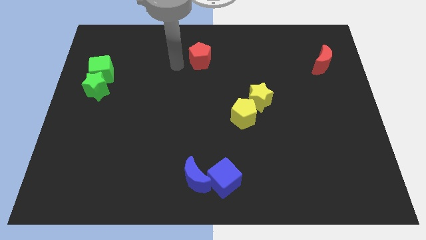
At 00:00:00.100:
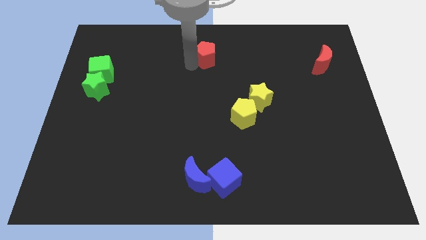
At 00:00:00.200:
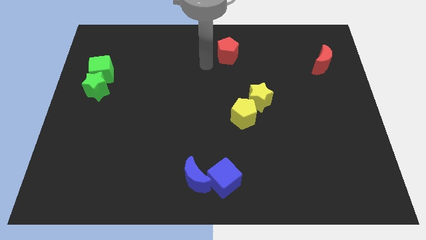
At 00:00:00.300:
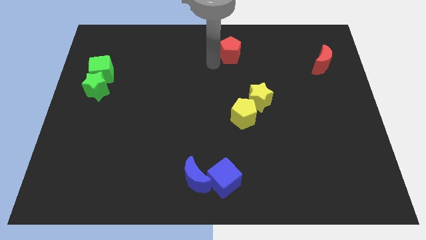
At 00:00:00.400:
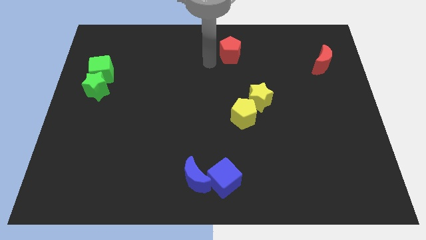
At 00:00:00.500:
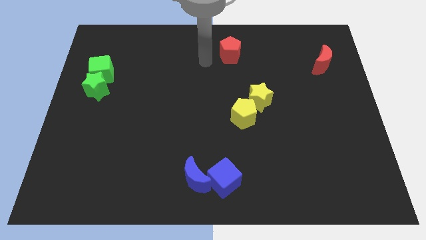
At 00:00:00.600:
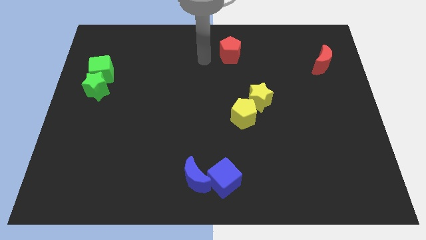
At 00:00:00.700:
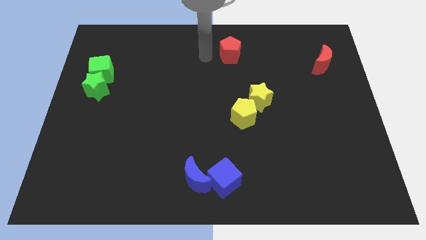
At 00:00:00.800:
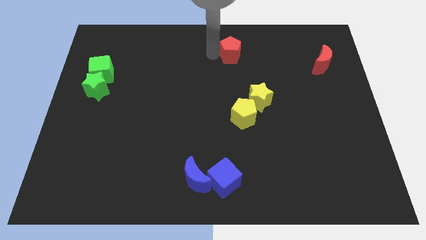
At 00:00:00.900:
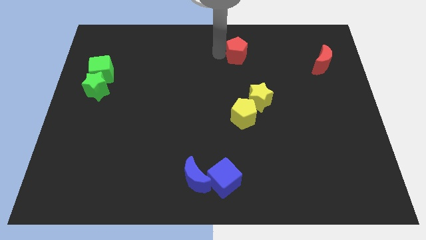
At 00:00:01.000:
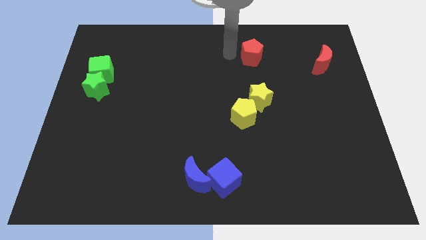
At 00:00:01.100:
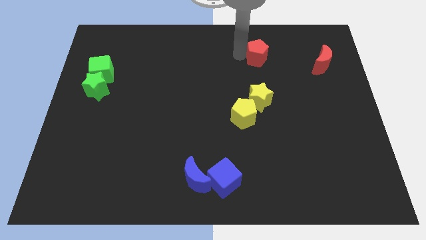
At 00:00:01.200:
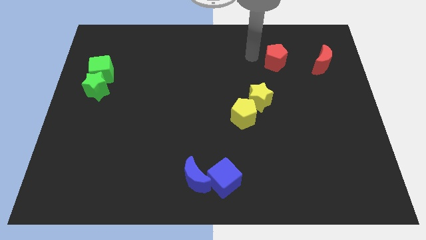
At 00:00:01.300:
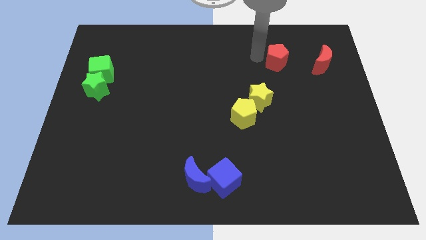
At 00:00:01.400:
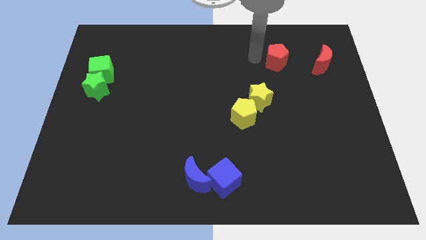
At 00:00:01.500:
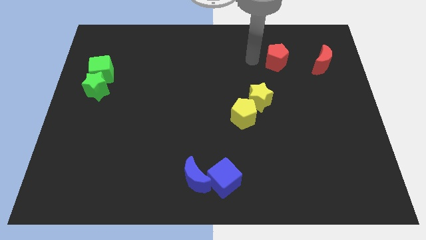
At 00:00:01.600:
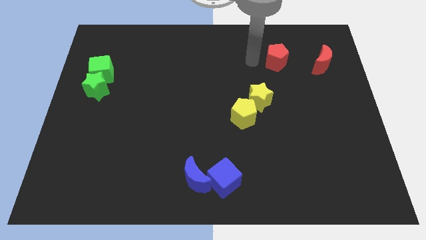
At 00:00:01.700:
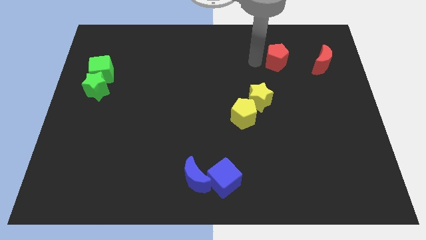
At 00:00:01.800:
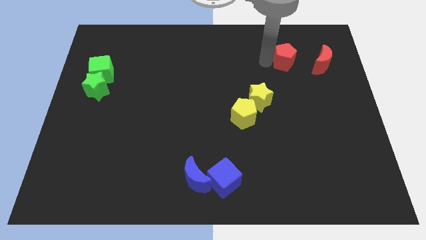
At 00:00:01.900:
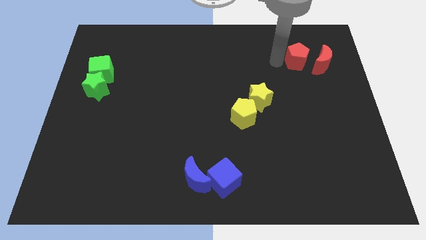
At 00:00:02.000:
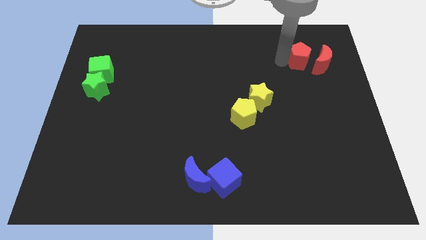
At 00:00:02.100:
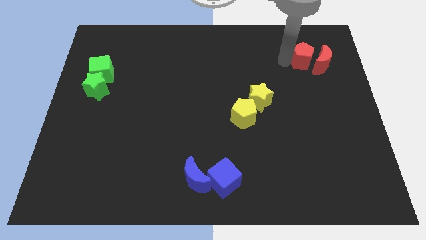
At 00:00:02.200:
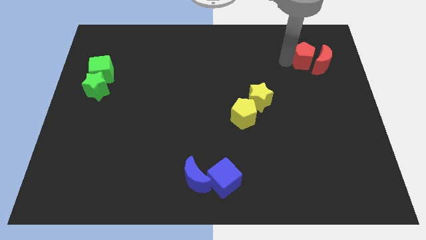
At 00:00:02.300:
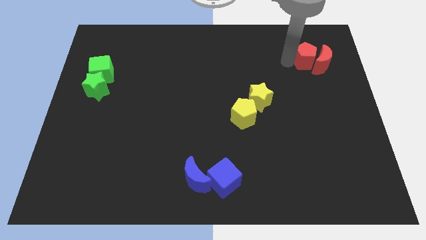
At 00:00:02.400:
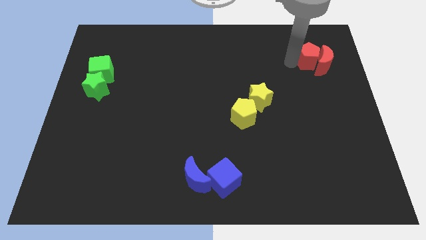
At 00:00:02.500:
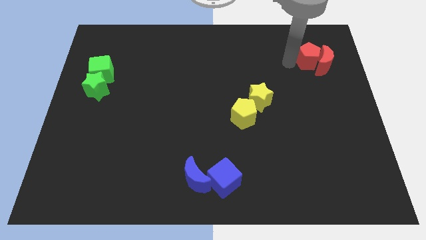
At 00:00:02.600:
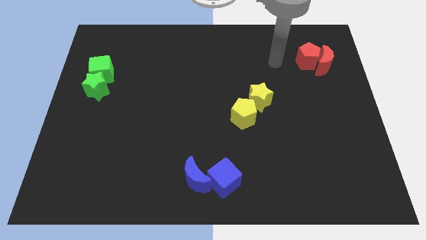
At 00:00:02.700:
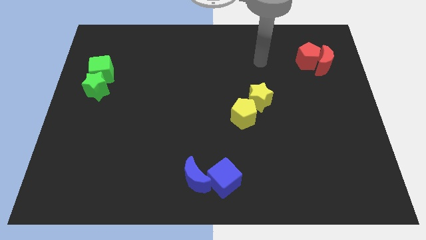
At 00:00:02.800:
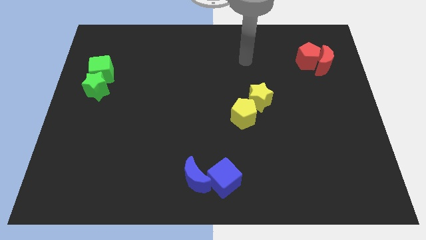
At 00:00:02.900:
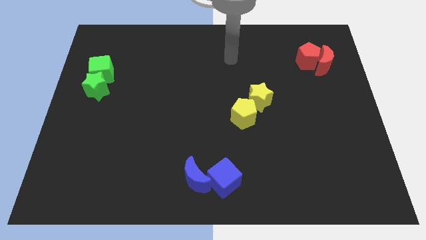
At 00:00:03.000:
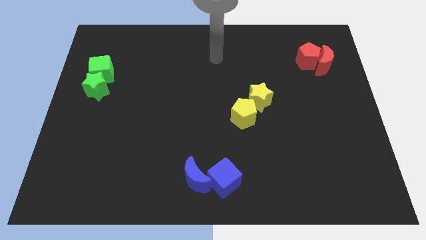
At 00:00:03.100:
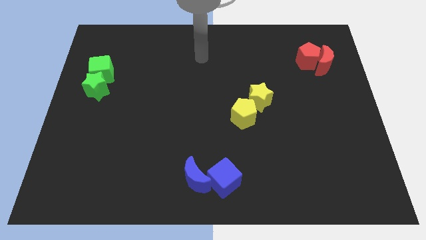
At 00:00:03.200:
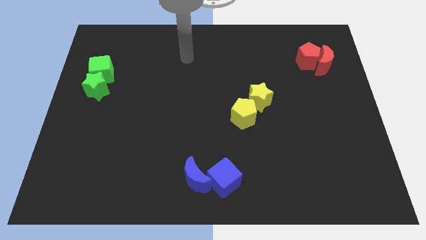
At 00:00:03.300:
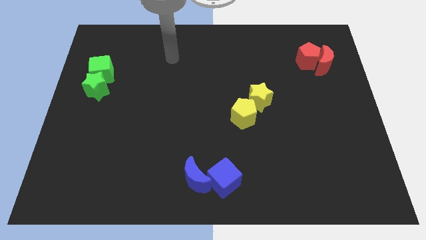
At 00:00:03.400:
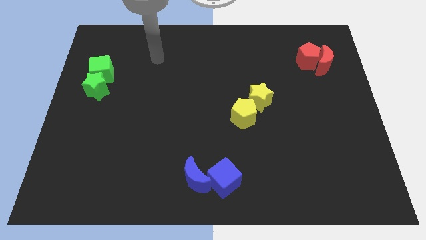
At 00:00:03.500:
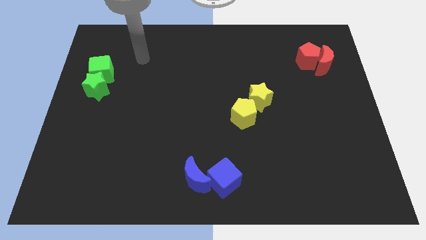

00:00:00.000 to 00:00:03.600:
push red pentagon into the blue moon

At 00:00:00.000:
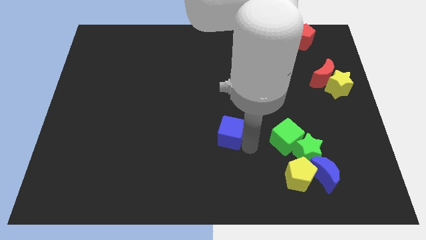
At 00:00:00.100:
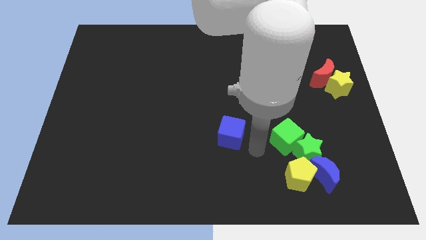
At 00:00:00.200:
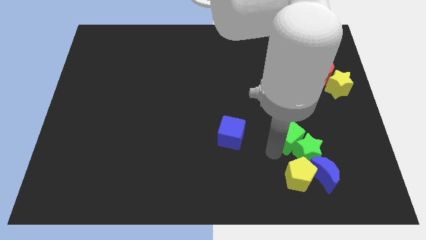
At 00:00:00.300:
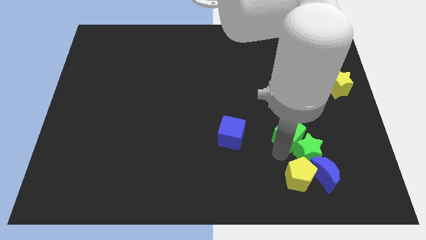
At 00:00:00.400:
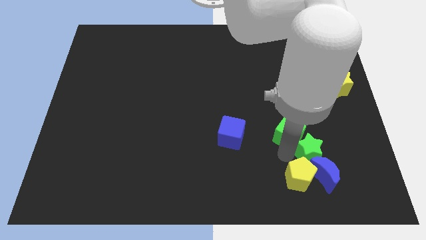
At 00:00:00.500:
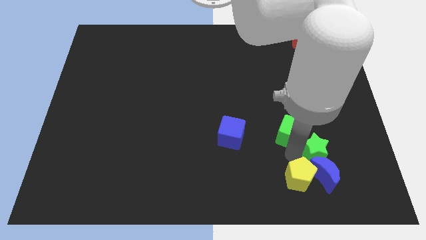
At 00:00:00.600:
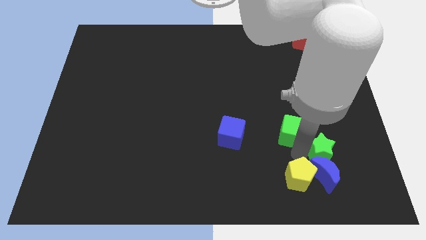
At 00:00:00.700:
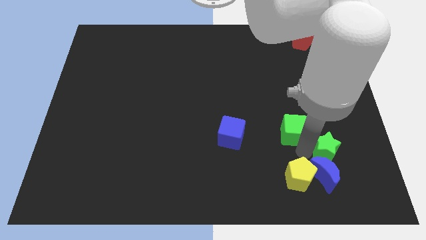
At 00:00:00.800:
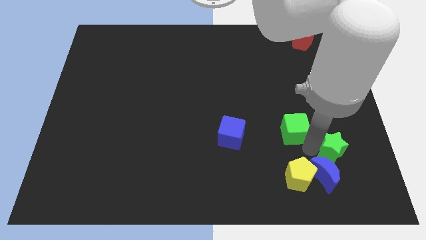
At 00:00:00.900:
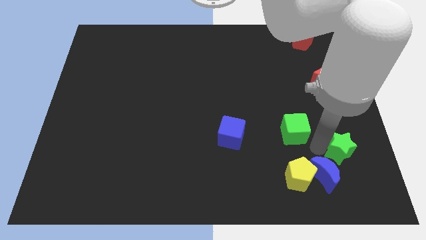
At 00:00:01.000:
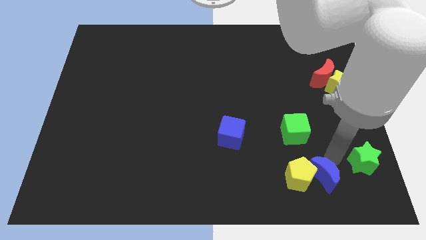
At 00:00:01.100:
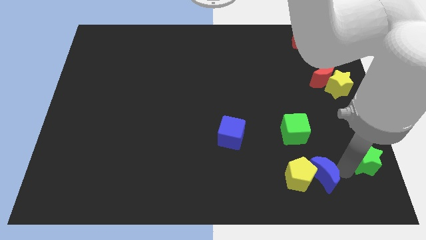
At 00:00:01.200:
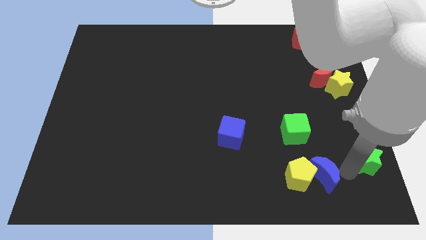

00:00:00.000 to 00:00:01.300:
separate the green cube and the green star

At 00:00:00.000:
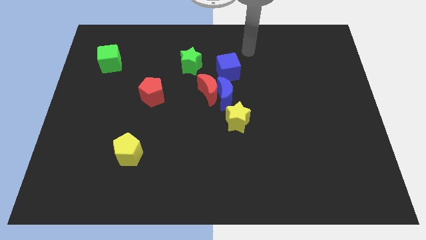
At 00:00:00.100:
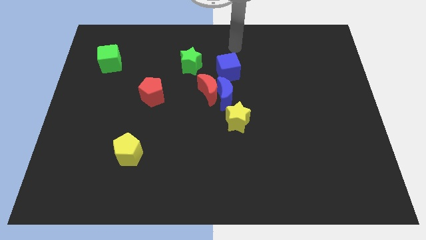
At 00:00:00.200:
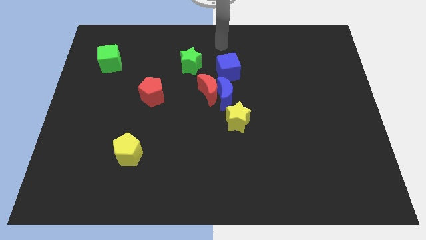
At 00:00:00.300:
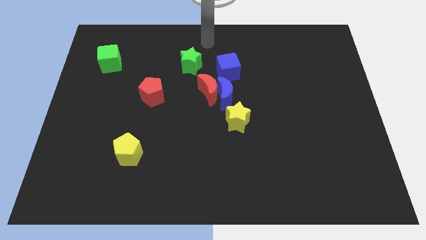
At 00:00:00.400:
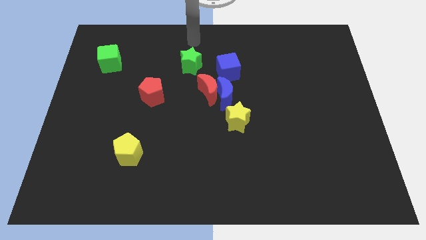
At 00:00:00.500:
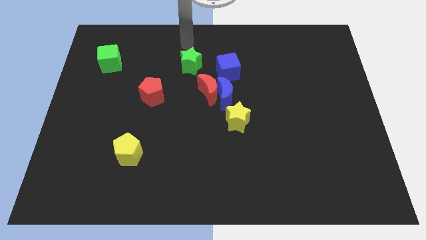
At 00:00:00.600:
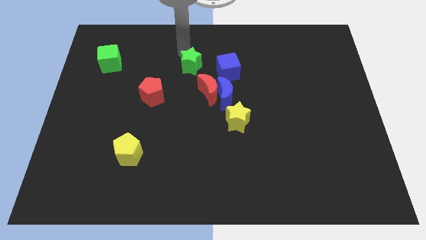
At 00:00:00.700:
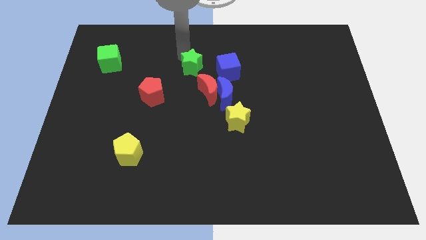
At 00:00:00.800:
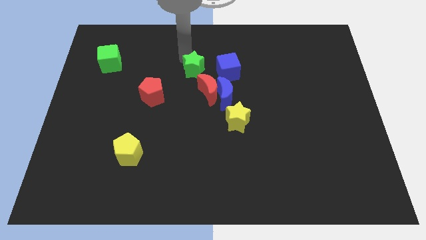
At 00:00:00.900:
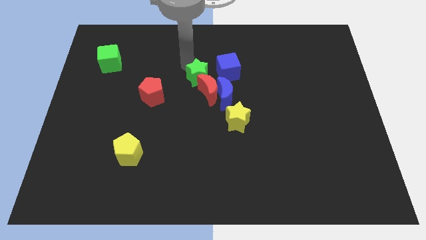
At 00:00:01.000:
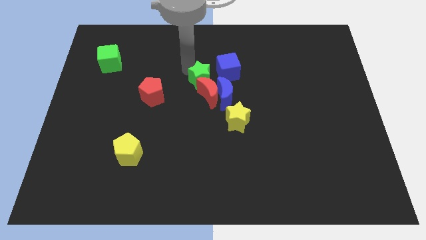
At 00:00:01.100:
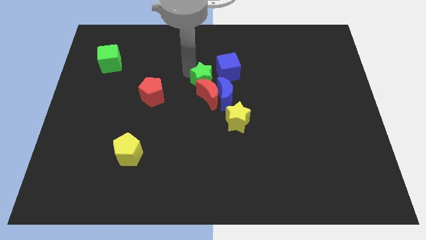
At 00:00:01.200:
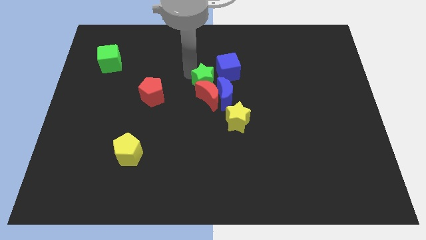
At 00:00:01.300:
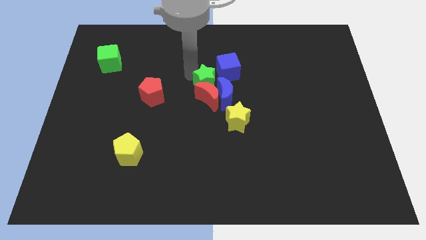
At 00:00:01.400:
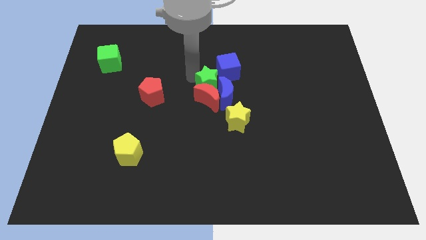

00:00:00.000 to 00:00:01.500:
place the green star above the red crescent

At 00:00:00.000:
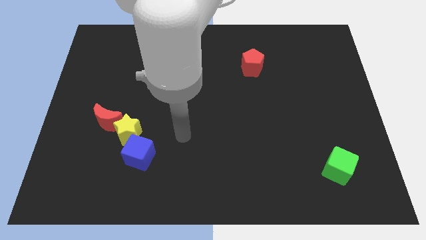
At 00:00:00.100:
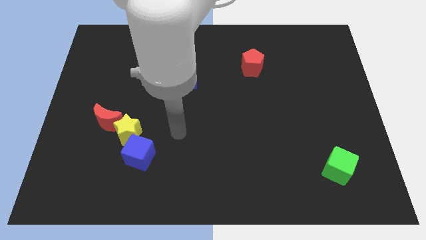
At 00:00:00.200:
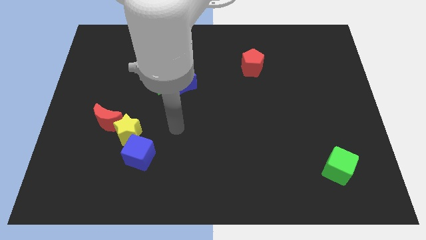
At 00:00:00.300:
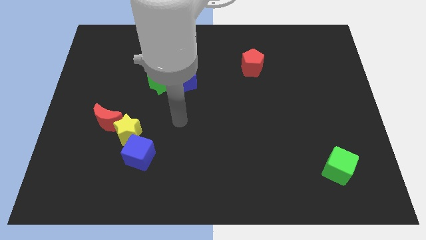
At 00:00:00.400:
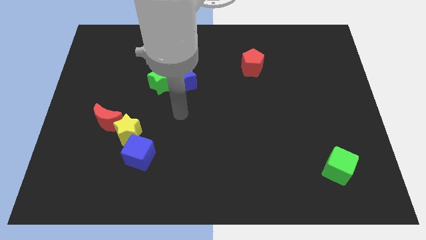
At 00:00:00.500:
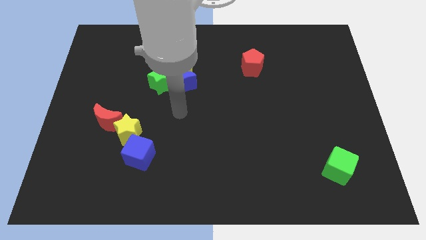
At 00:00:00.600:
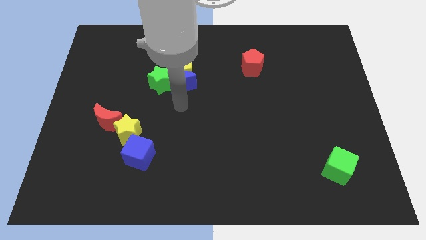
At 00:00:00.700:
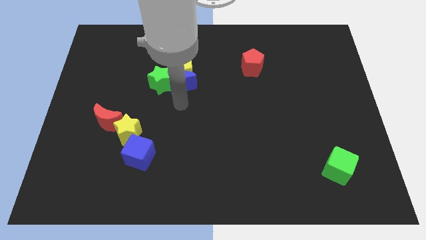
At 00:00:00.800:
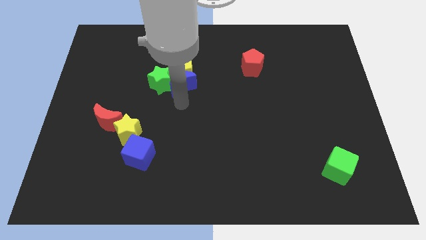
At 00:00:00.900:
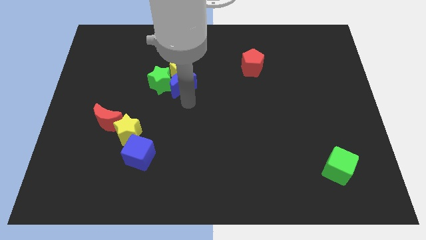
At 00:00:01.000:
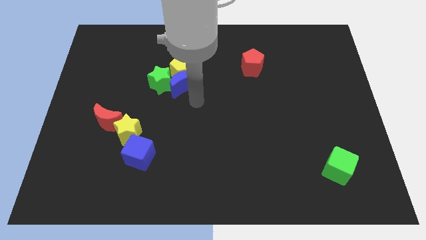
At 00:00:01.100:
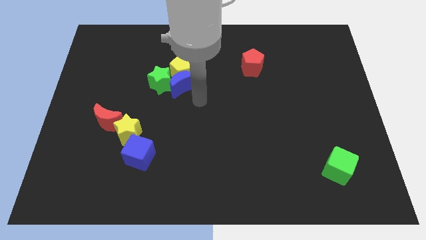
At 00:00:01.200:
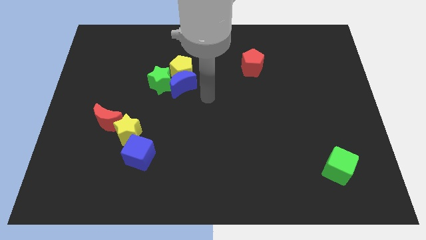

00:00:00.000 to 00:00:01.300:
move your arm towards the blue crescent

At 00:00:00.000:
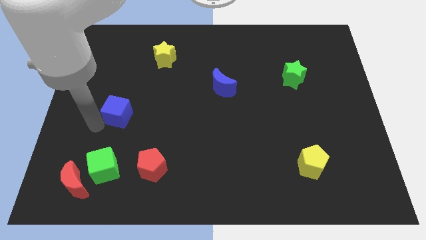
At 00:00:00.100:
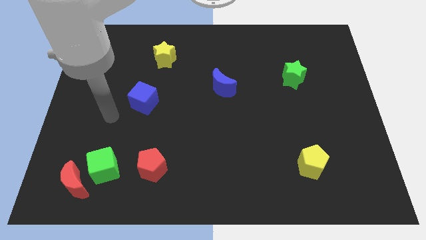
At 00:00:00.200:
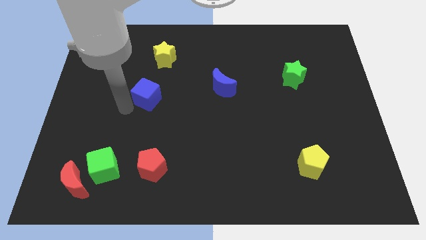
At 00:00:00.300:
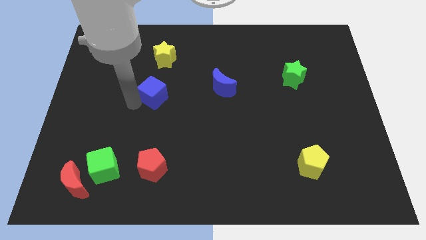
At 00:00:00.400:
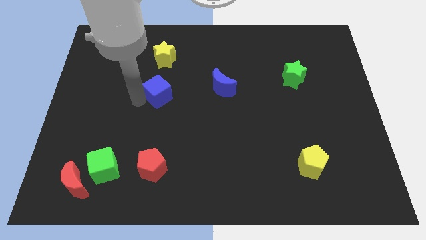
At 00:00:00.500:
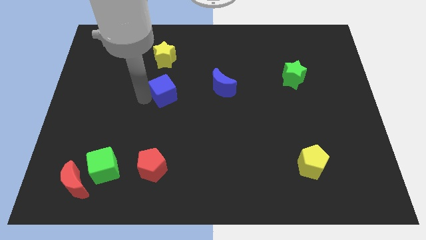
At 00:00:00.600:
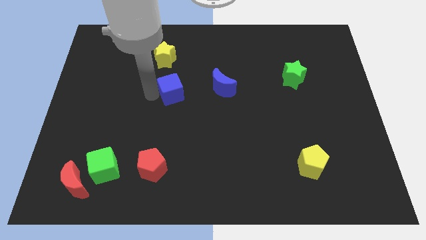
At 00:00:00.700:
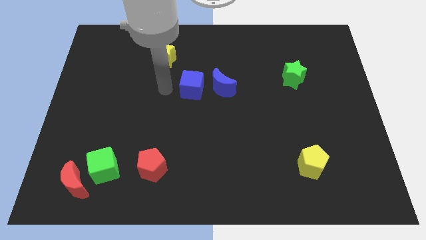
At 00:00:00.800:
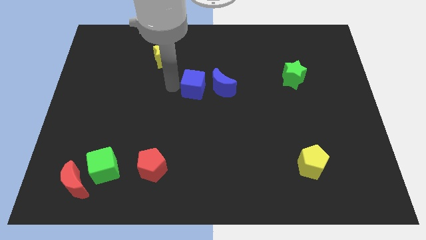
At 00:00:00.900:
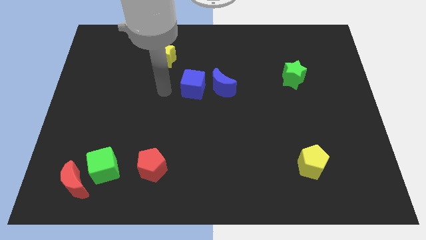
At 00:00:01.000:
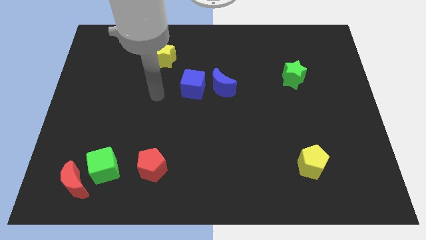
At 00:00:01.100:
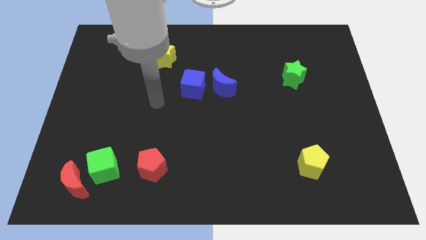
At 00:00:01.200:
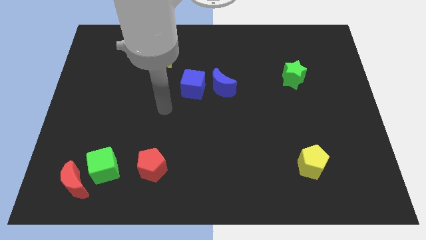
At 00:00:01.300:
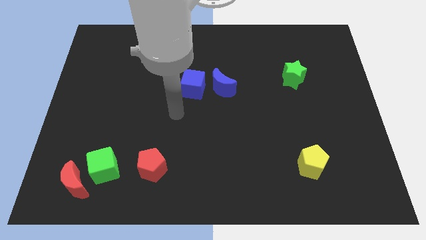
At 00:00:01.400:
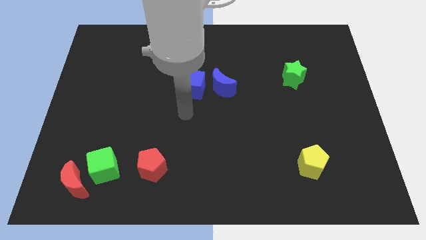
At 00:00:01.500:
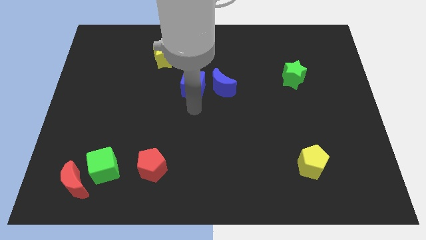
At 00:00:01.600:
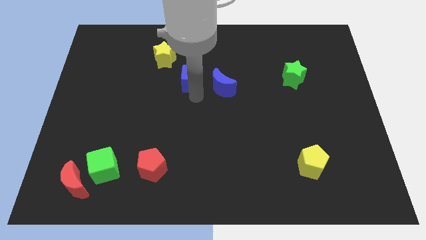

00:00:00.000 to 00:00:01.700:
push the blue cube left to the blue moon
